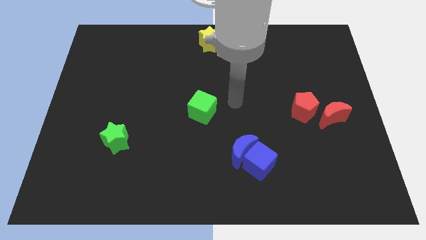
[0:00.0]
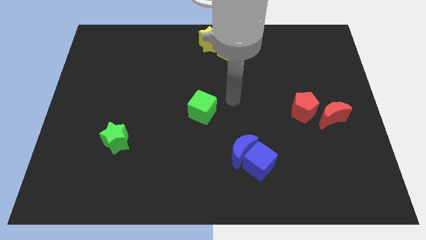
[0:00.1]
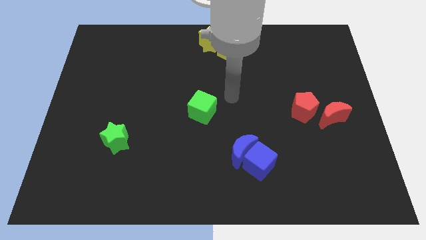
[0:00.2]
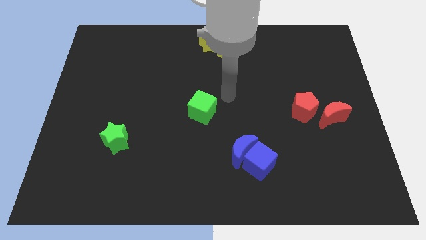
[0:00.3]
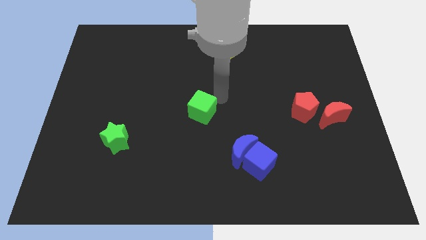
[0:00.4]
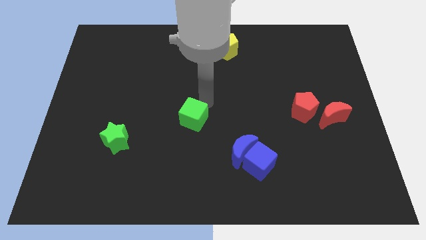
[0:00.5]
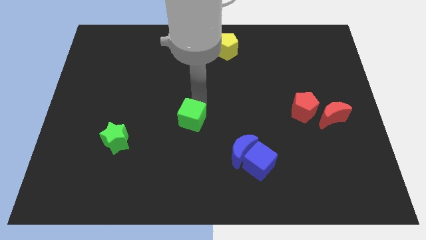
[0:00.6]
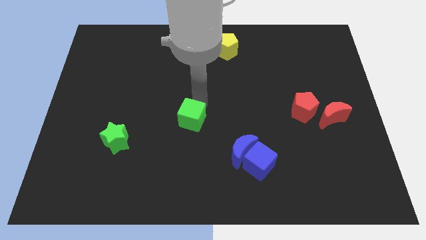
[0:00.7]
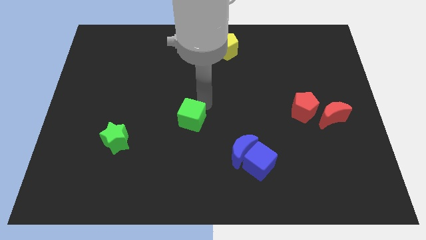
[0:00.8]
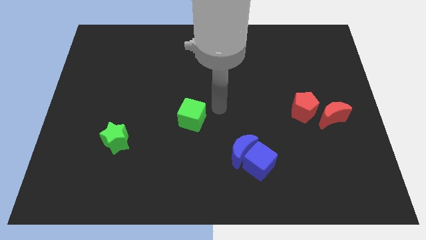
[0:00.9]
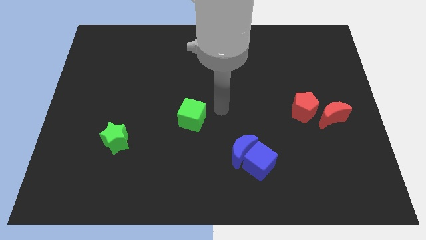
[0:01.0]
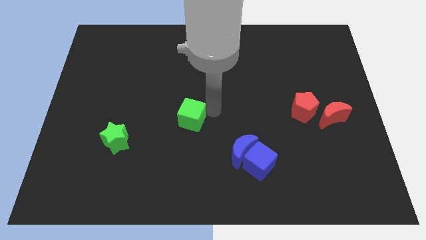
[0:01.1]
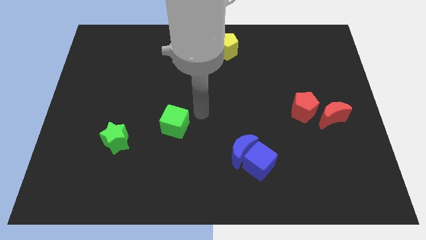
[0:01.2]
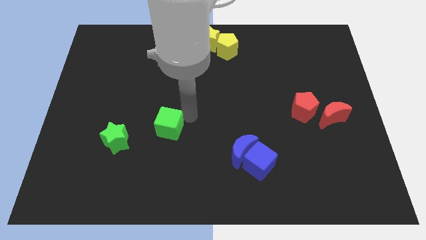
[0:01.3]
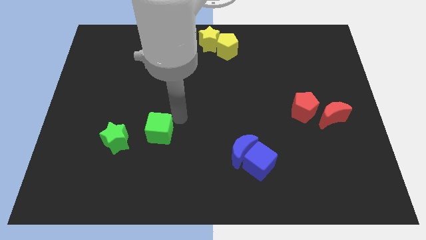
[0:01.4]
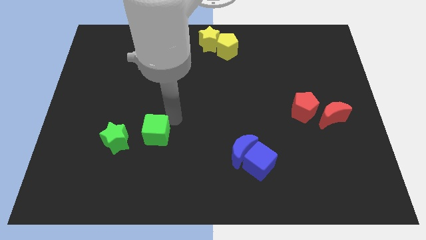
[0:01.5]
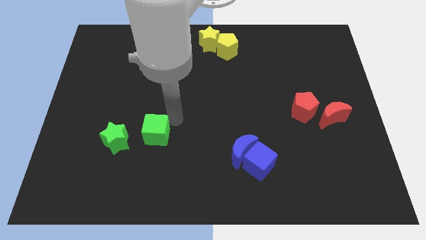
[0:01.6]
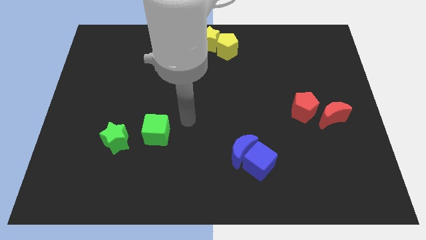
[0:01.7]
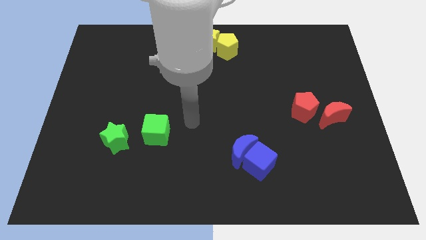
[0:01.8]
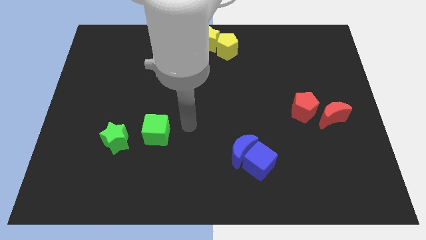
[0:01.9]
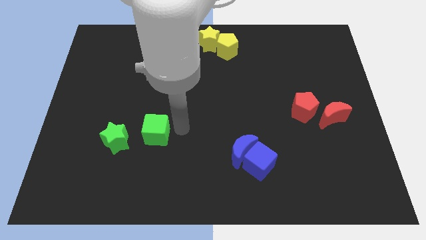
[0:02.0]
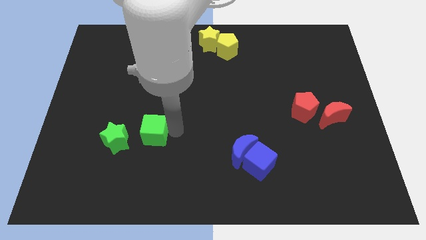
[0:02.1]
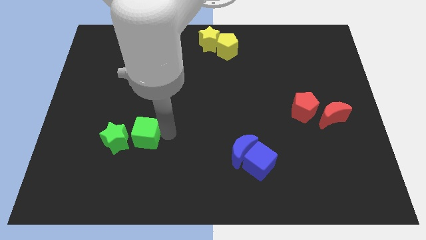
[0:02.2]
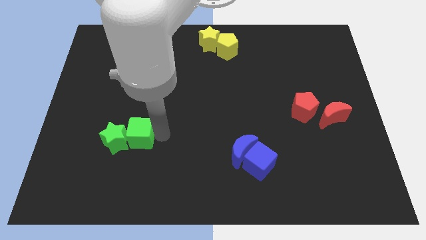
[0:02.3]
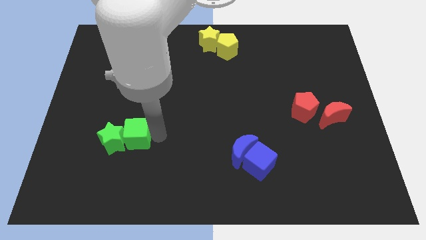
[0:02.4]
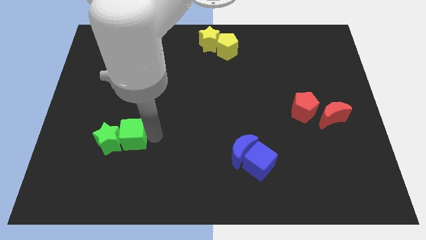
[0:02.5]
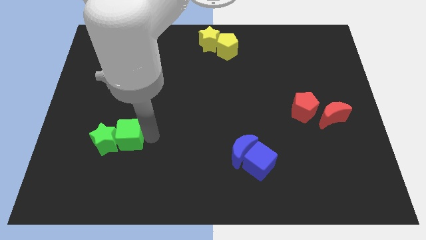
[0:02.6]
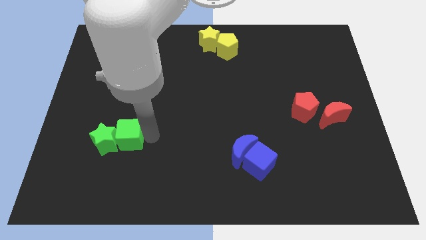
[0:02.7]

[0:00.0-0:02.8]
push the green cube into green star

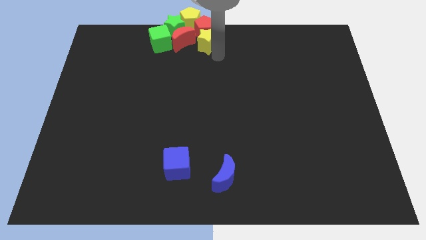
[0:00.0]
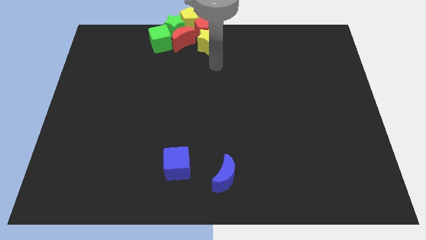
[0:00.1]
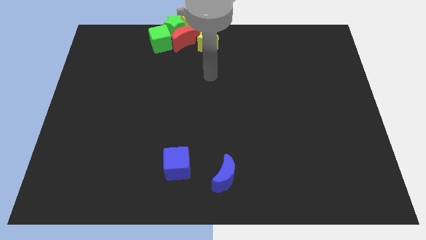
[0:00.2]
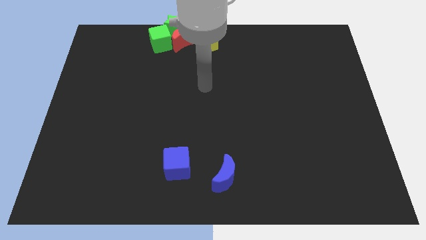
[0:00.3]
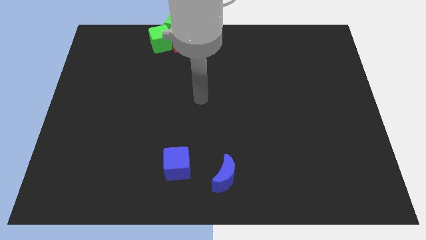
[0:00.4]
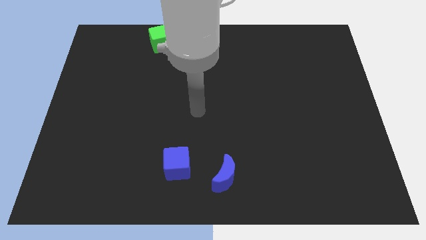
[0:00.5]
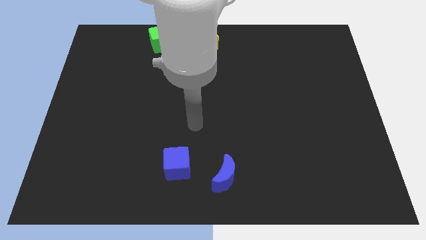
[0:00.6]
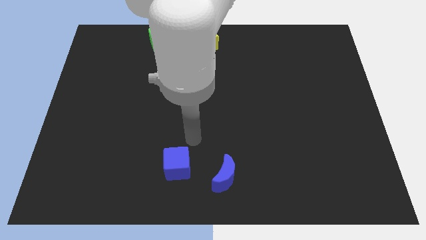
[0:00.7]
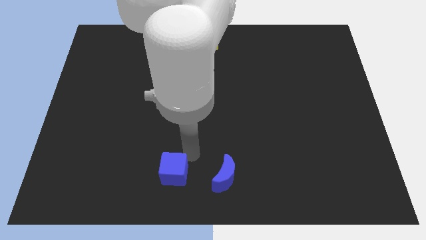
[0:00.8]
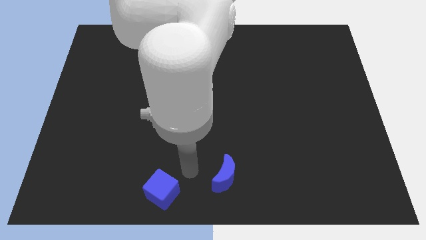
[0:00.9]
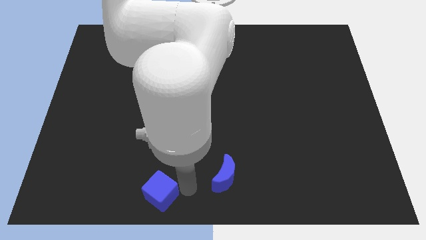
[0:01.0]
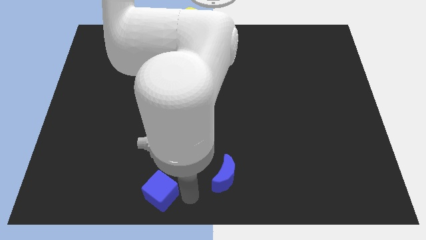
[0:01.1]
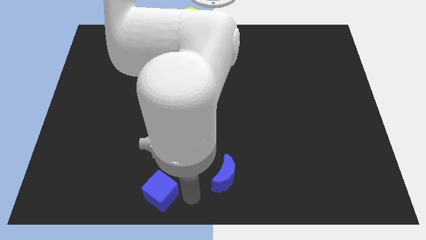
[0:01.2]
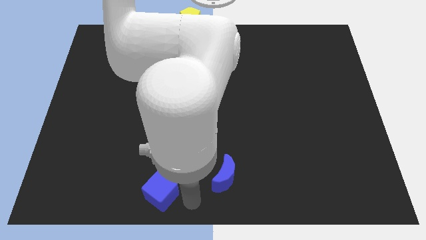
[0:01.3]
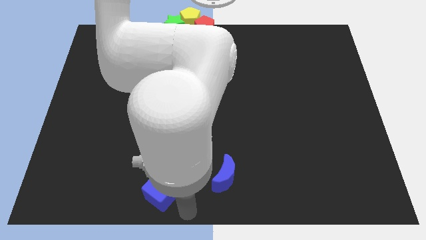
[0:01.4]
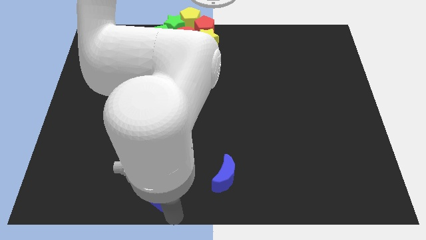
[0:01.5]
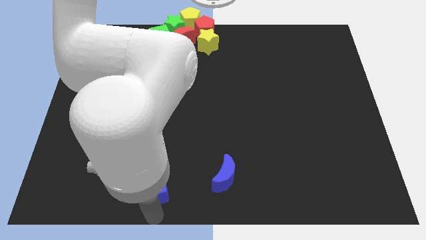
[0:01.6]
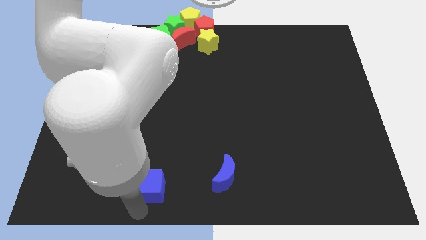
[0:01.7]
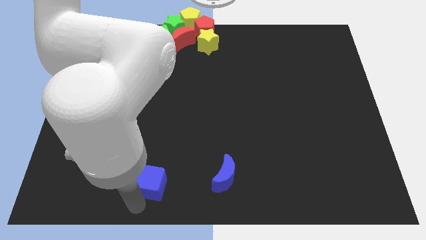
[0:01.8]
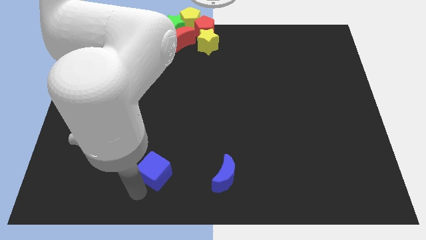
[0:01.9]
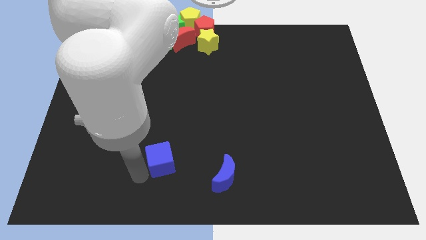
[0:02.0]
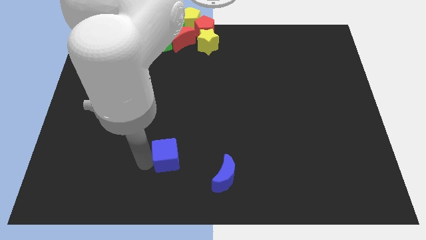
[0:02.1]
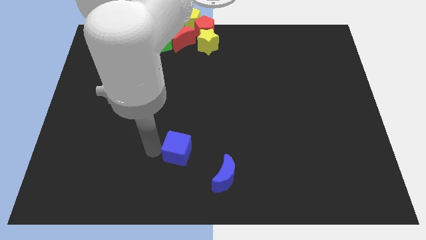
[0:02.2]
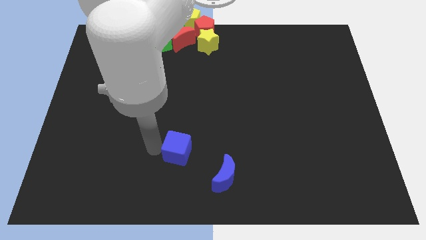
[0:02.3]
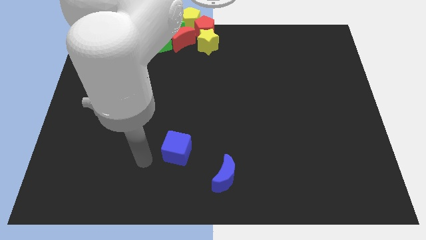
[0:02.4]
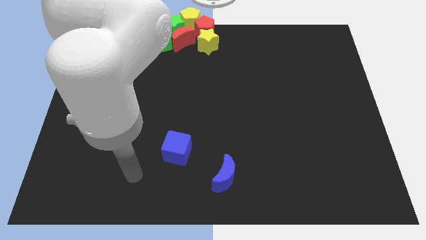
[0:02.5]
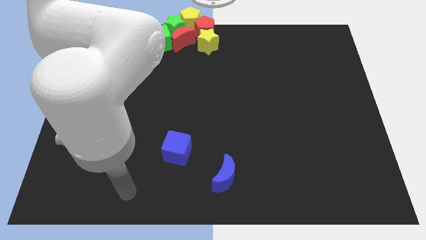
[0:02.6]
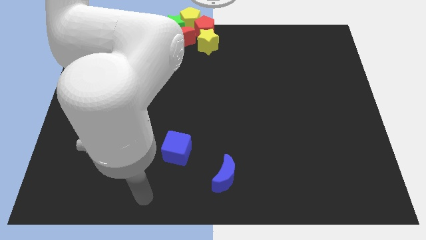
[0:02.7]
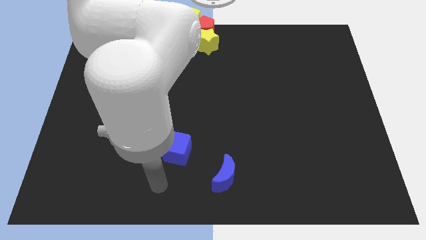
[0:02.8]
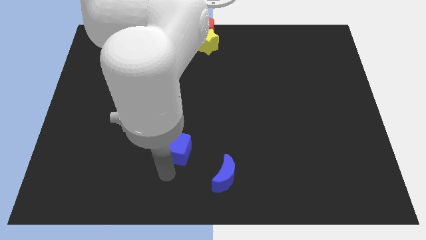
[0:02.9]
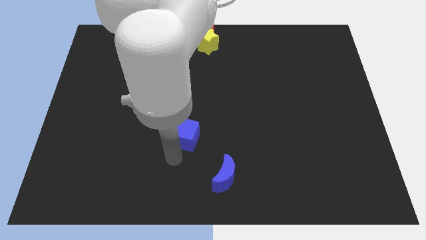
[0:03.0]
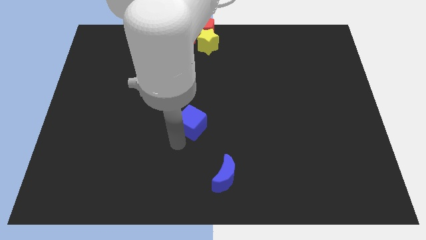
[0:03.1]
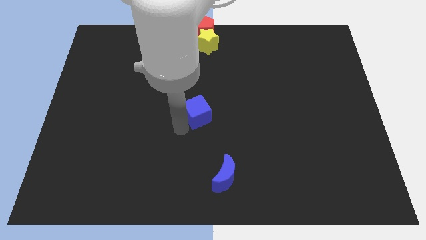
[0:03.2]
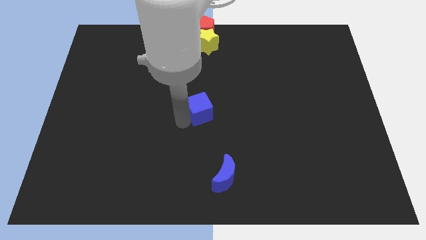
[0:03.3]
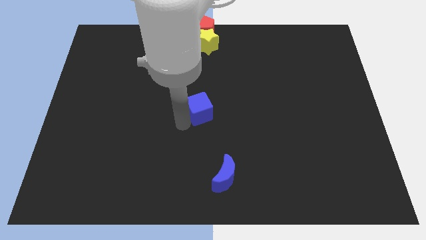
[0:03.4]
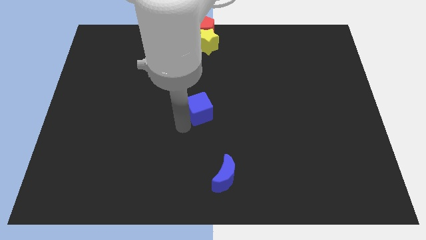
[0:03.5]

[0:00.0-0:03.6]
place the blue cube to the middle of the board

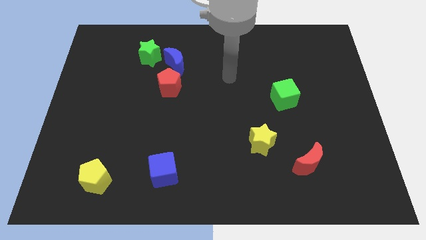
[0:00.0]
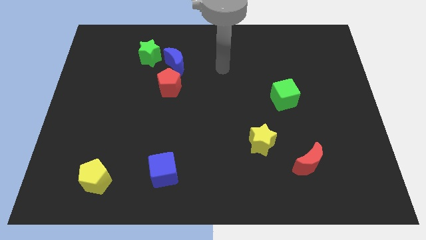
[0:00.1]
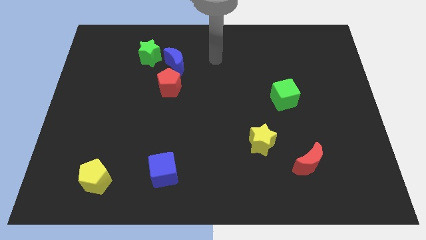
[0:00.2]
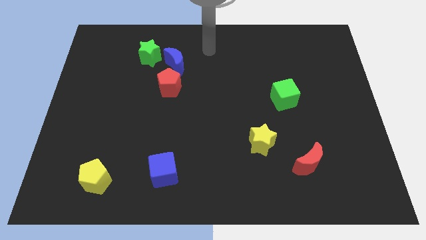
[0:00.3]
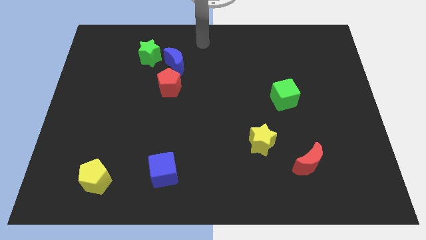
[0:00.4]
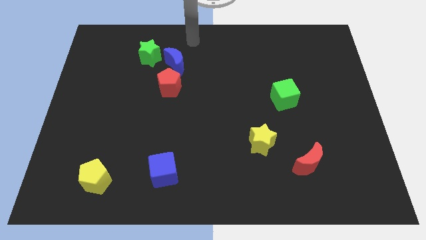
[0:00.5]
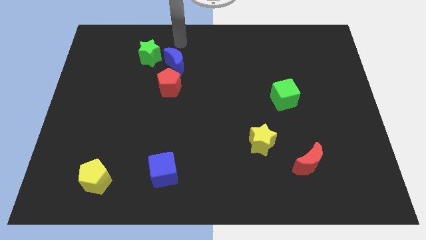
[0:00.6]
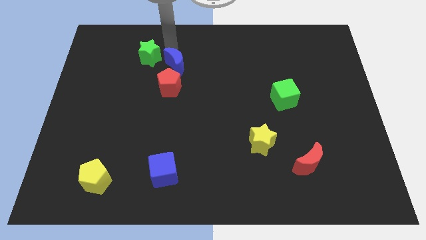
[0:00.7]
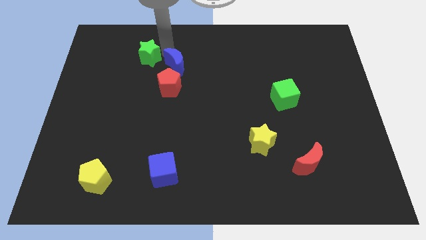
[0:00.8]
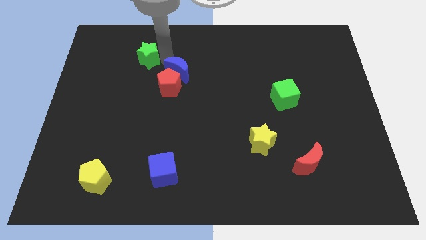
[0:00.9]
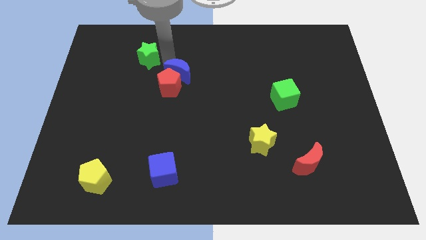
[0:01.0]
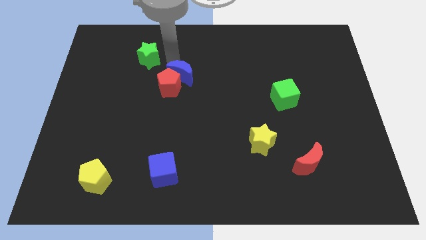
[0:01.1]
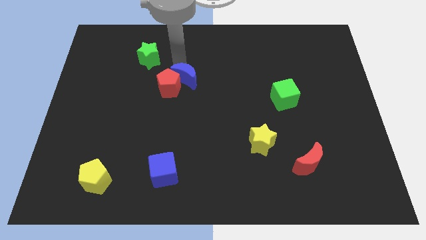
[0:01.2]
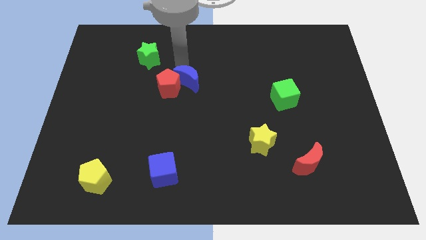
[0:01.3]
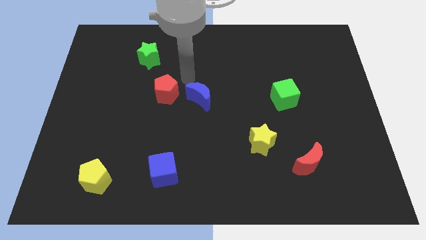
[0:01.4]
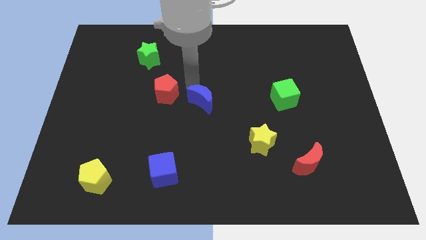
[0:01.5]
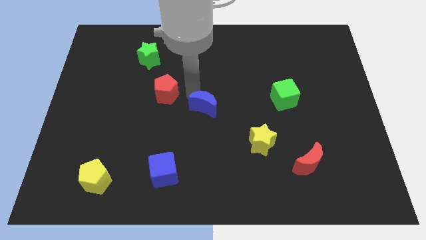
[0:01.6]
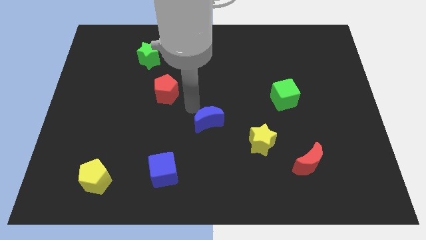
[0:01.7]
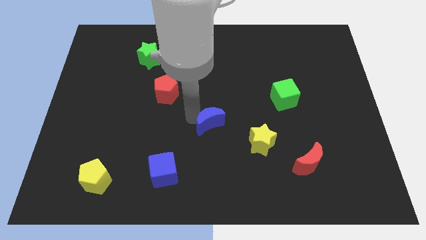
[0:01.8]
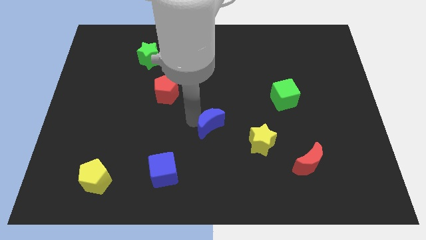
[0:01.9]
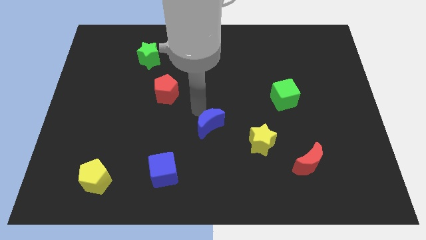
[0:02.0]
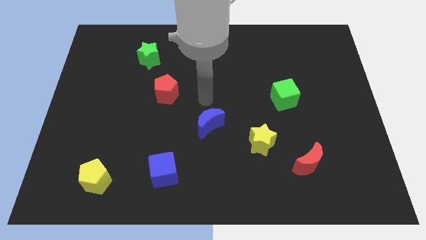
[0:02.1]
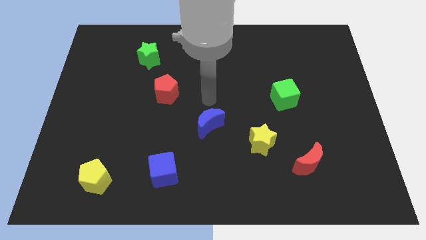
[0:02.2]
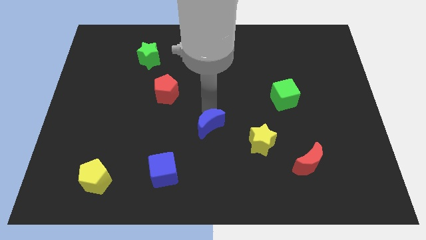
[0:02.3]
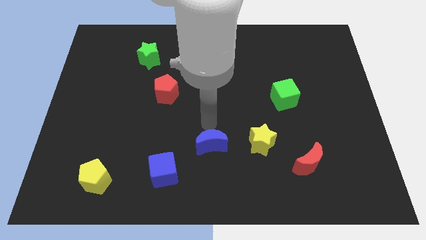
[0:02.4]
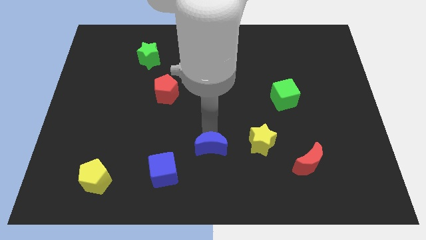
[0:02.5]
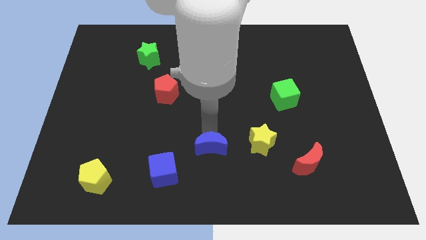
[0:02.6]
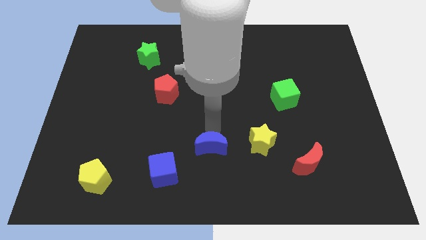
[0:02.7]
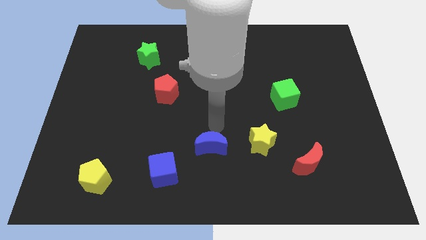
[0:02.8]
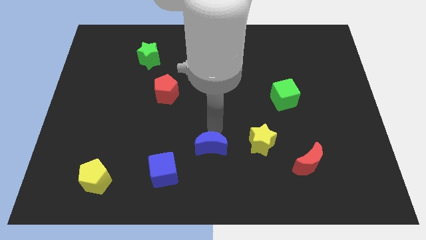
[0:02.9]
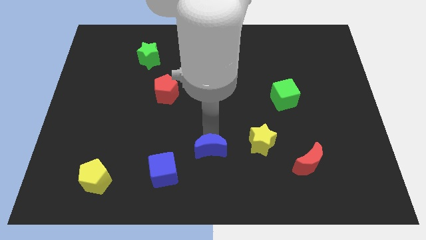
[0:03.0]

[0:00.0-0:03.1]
push the blue crescent to the left of the yellow star
